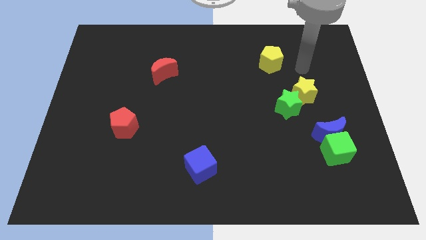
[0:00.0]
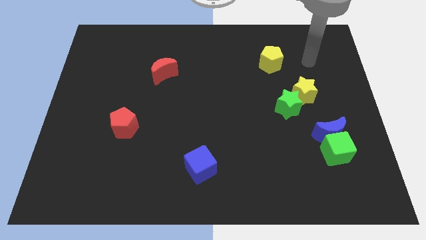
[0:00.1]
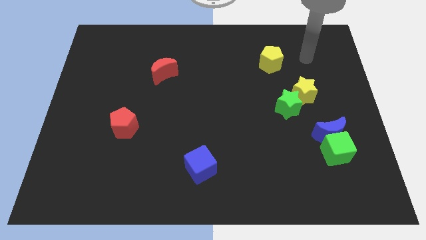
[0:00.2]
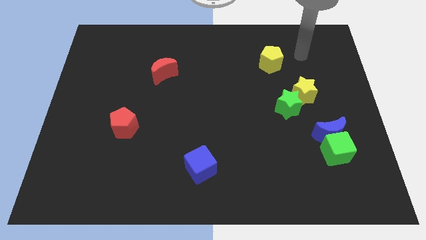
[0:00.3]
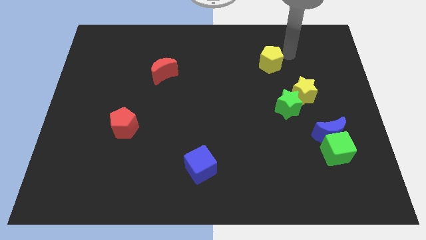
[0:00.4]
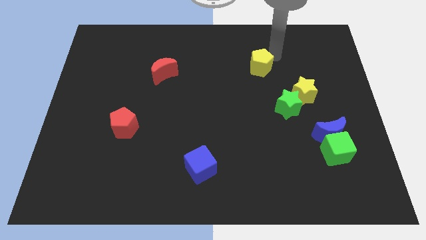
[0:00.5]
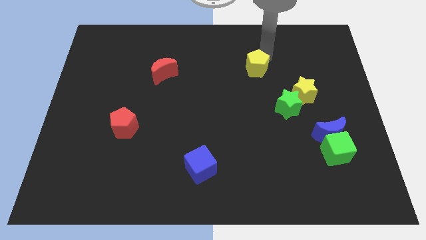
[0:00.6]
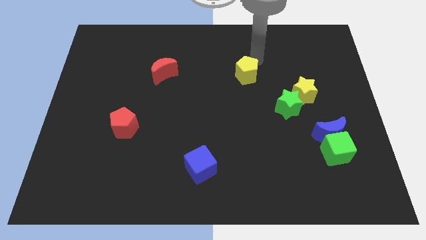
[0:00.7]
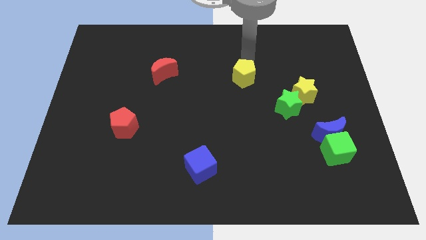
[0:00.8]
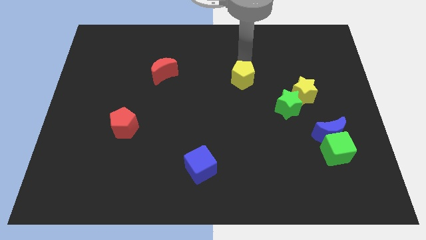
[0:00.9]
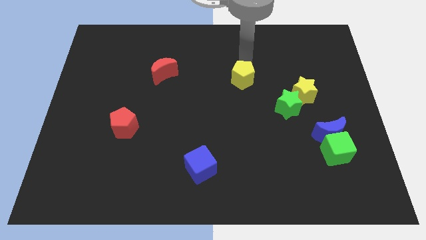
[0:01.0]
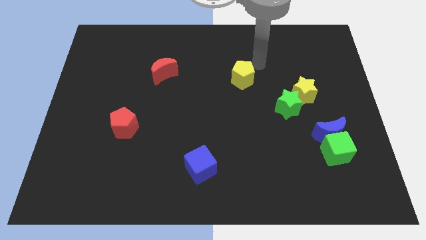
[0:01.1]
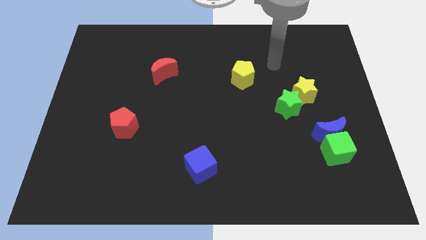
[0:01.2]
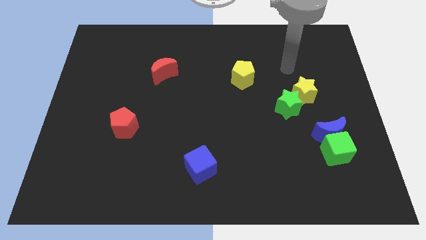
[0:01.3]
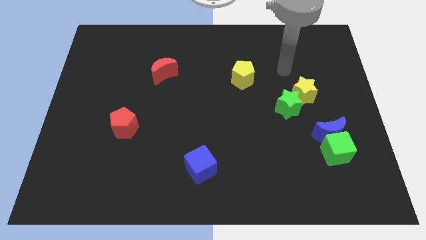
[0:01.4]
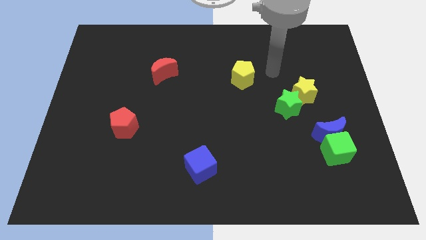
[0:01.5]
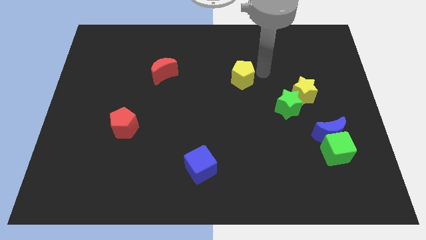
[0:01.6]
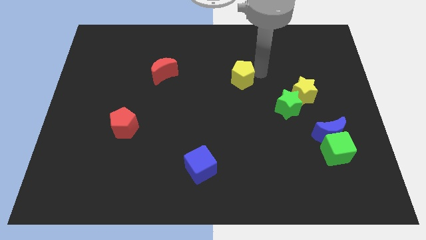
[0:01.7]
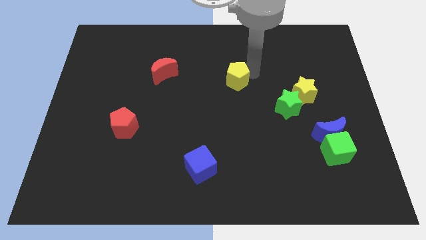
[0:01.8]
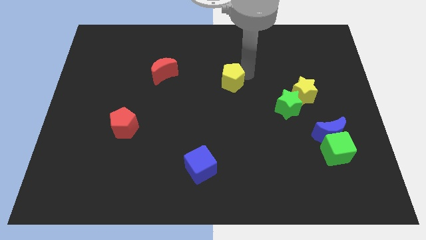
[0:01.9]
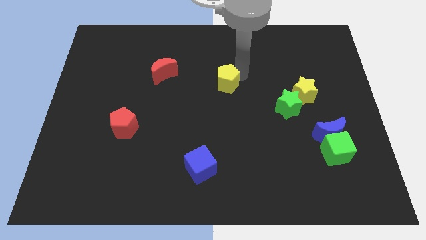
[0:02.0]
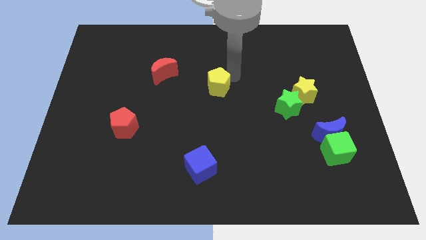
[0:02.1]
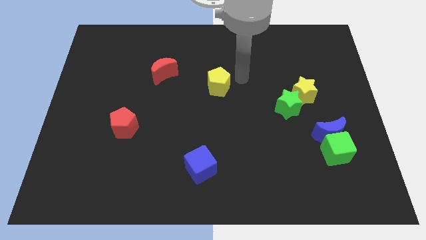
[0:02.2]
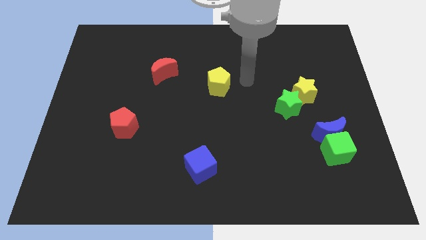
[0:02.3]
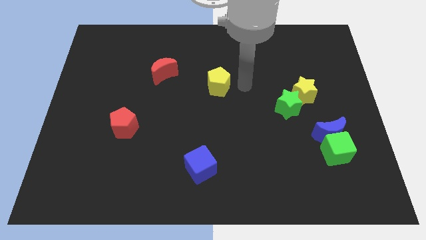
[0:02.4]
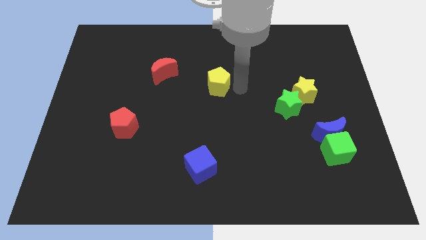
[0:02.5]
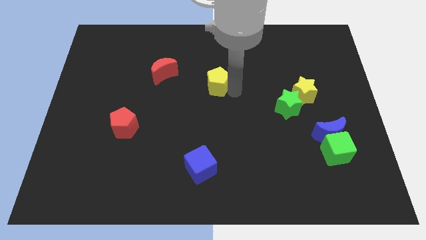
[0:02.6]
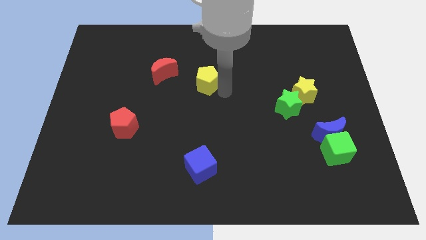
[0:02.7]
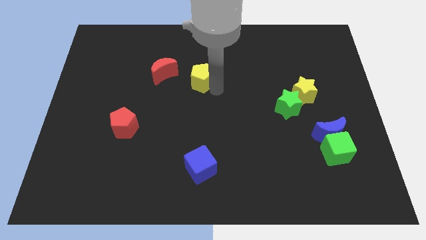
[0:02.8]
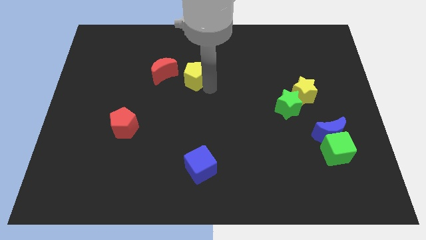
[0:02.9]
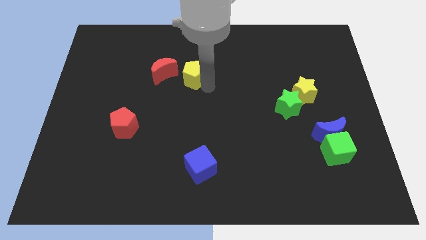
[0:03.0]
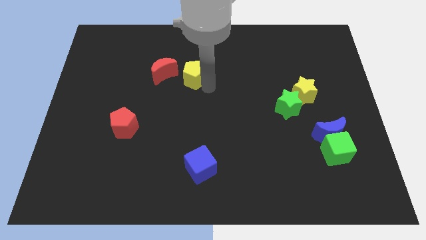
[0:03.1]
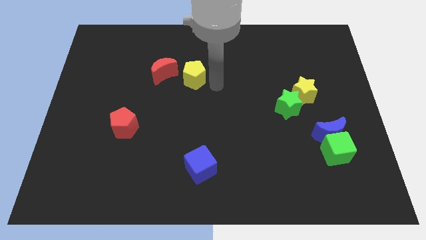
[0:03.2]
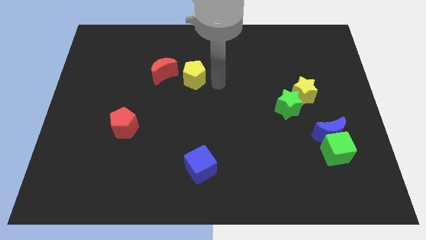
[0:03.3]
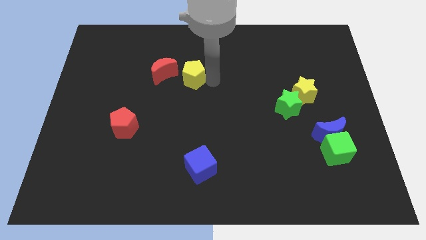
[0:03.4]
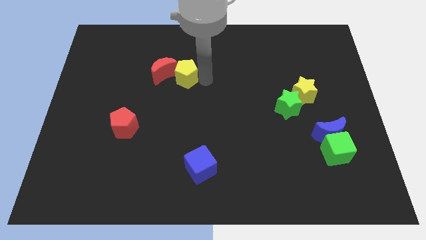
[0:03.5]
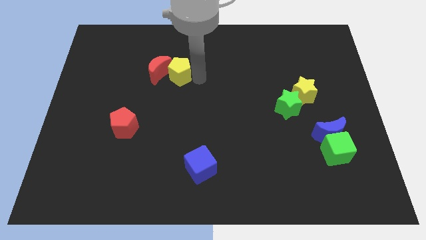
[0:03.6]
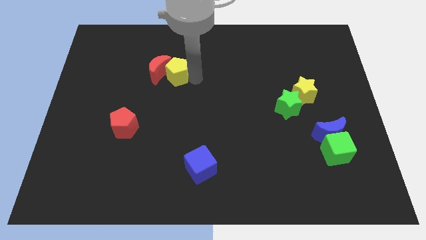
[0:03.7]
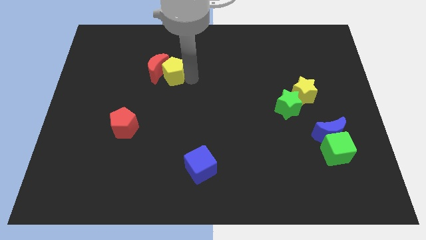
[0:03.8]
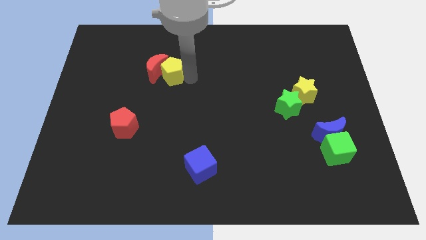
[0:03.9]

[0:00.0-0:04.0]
push the yellow pentagon into the red crescent

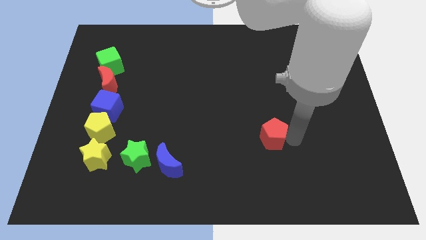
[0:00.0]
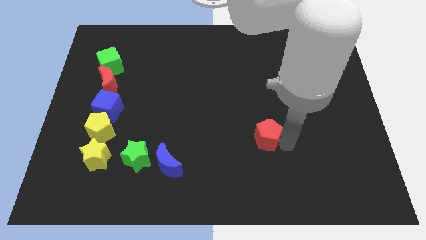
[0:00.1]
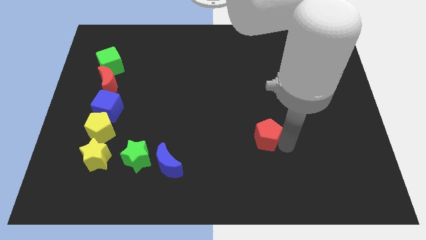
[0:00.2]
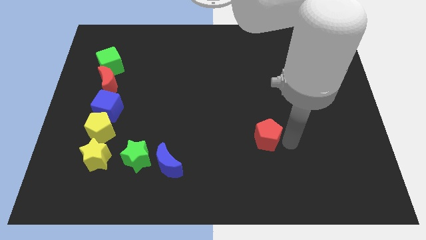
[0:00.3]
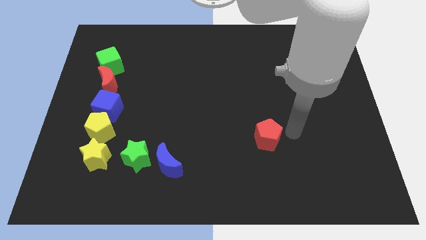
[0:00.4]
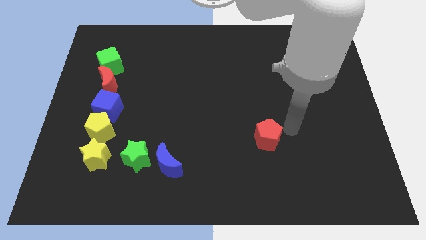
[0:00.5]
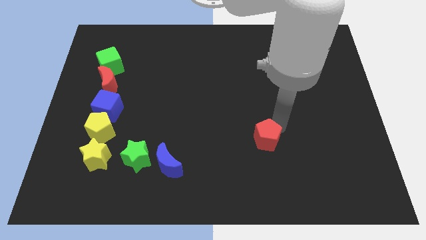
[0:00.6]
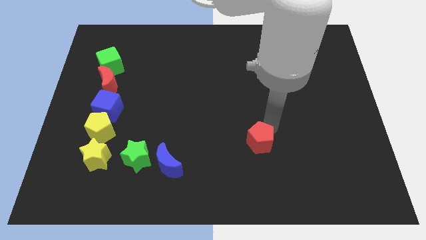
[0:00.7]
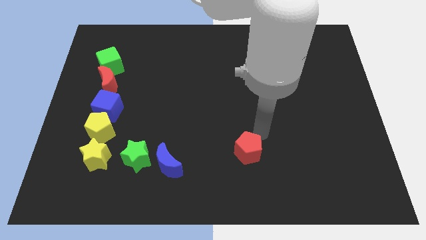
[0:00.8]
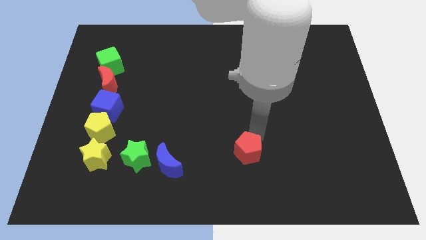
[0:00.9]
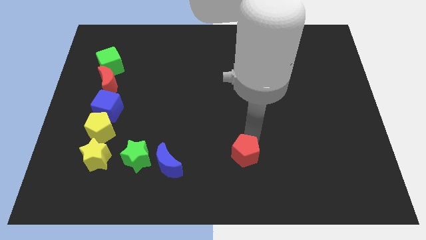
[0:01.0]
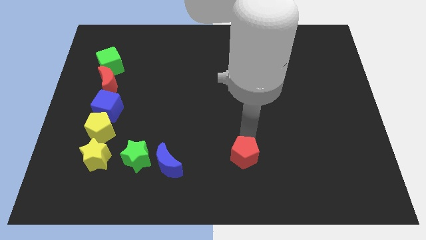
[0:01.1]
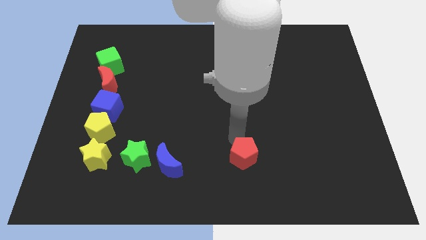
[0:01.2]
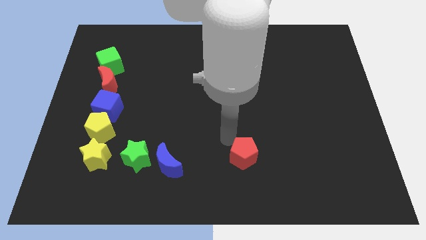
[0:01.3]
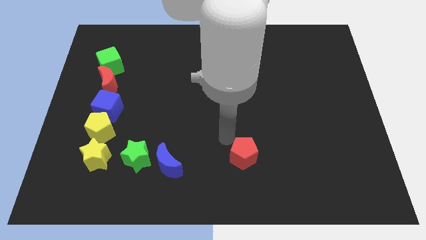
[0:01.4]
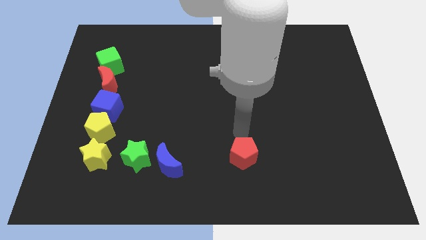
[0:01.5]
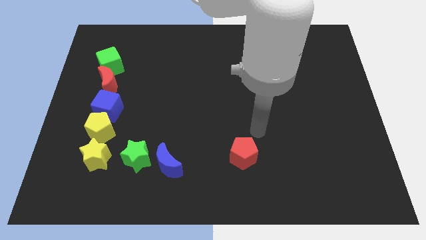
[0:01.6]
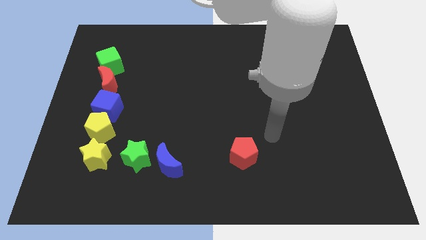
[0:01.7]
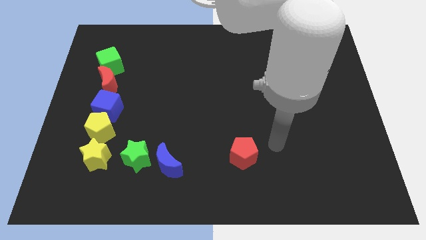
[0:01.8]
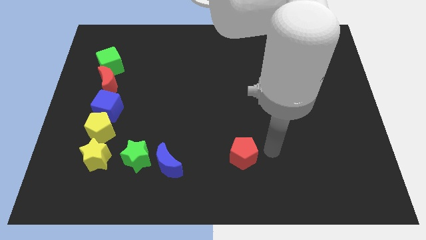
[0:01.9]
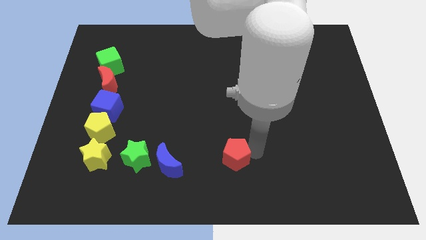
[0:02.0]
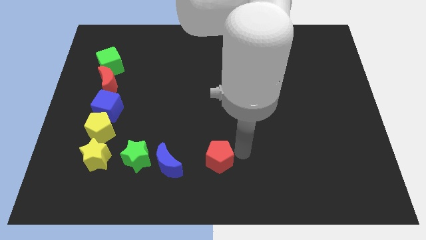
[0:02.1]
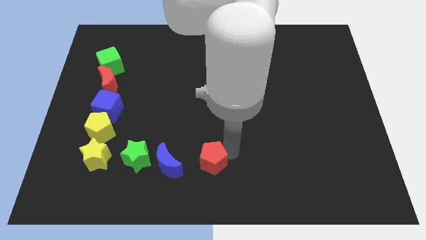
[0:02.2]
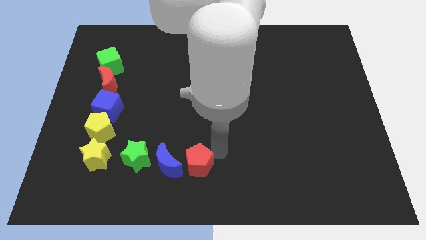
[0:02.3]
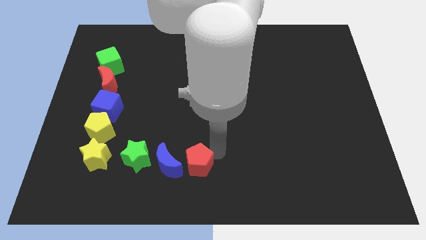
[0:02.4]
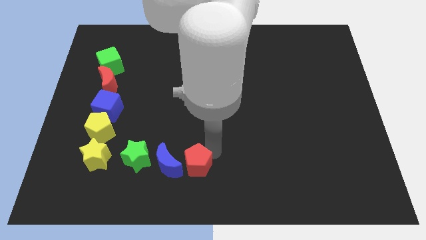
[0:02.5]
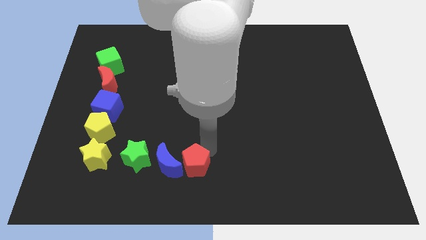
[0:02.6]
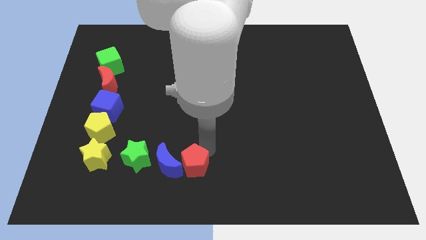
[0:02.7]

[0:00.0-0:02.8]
move the red pentagon to the right of blue moon

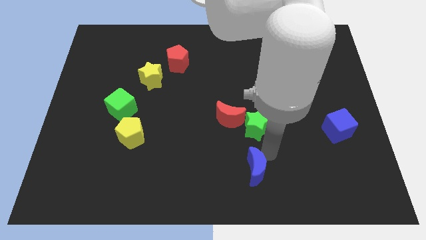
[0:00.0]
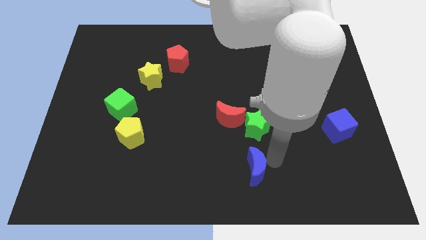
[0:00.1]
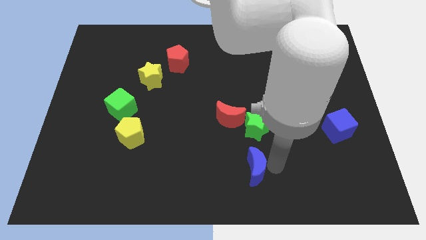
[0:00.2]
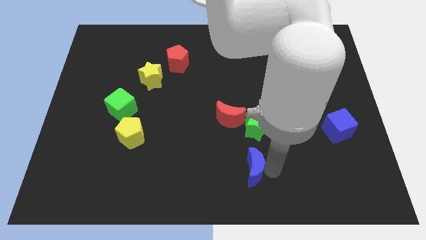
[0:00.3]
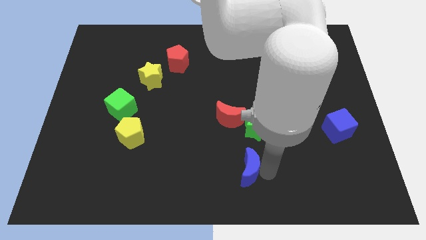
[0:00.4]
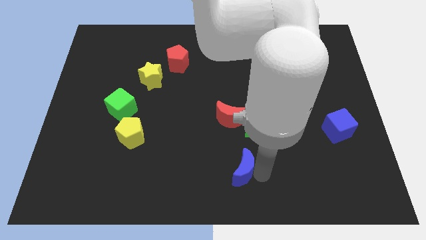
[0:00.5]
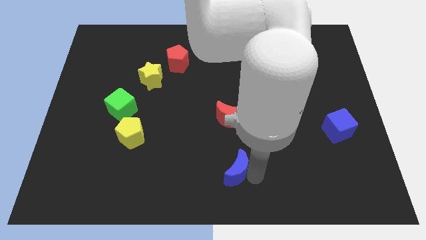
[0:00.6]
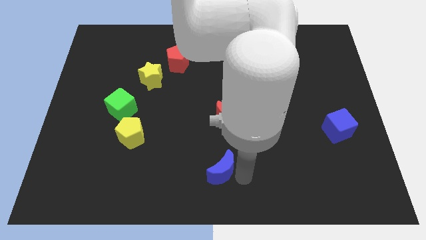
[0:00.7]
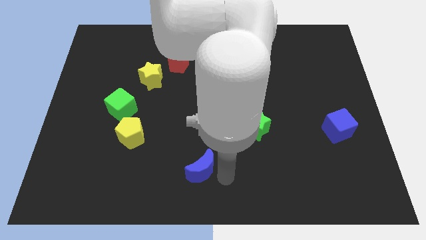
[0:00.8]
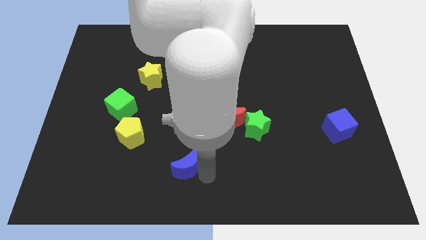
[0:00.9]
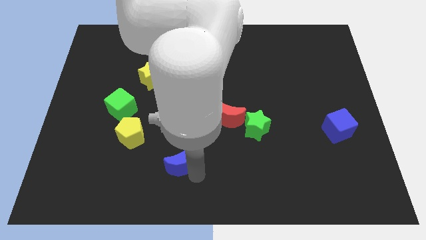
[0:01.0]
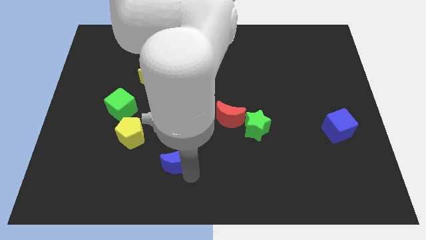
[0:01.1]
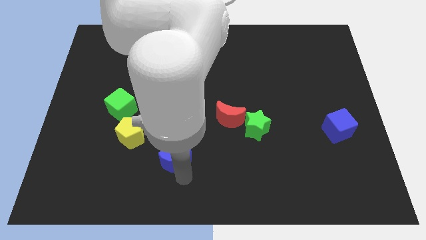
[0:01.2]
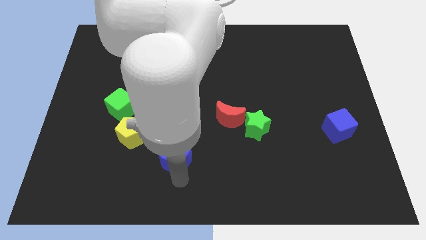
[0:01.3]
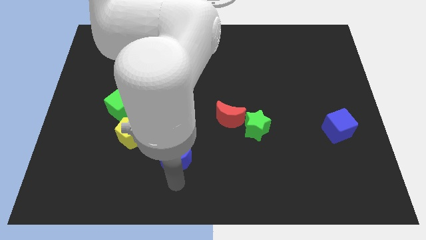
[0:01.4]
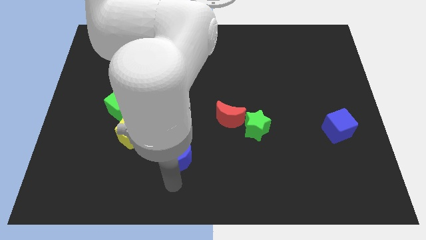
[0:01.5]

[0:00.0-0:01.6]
push the blue crescent to the bottom left of the red crescent

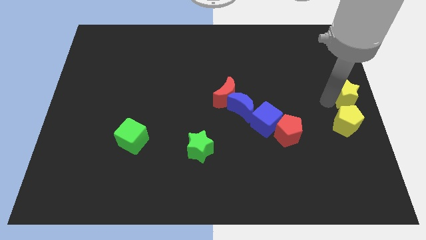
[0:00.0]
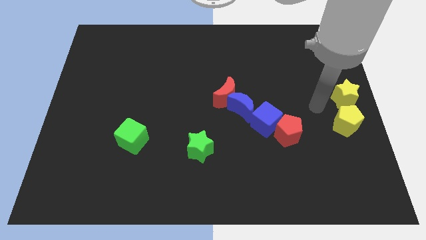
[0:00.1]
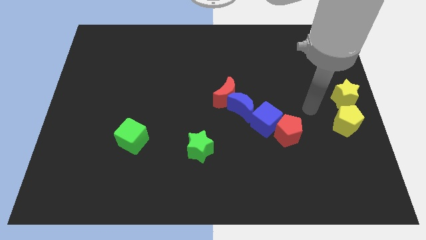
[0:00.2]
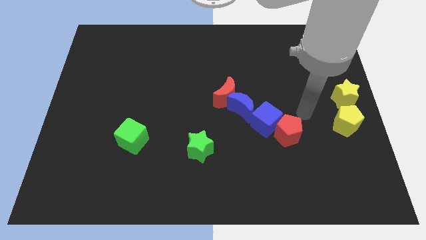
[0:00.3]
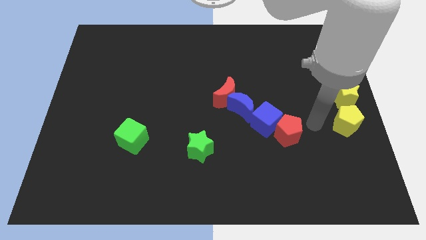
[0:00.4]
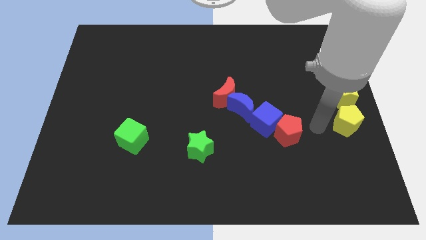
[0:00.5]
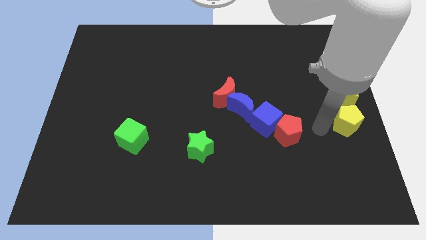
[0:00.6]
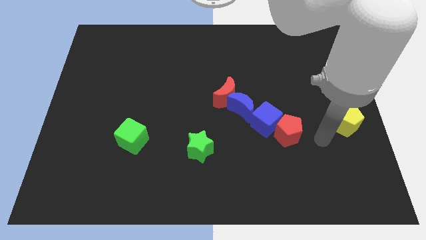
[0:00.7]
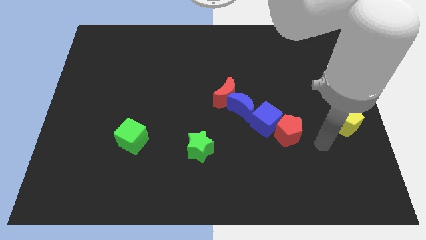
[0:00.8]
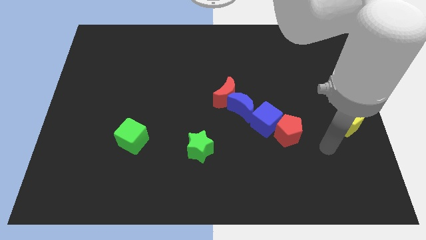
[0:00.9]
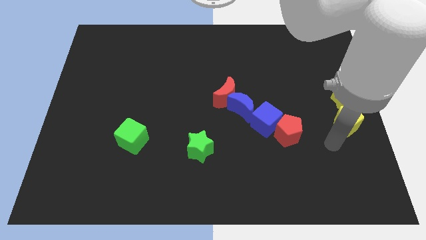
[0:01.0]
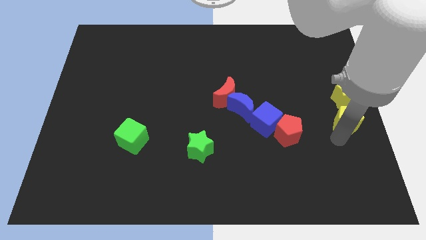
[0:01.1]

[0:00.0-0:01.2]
put your arm at the bottom left side of yellow pentagon
